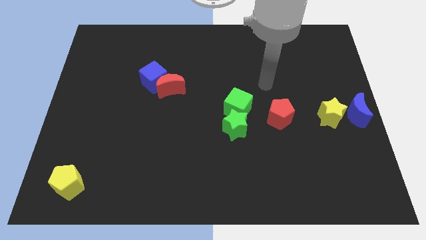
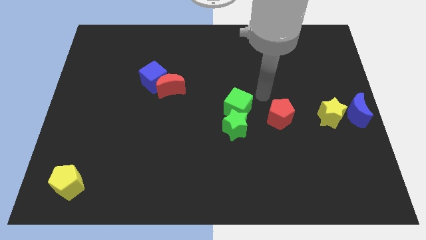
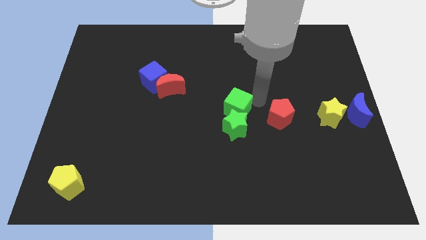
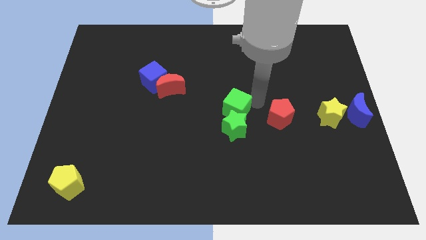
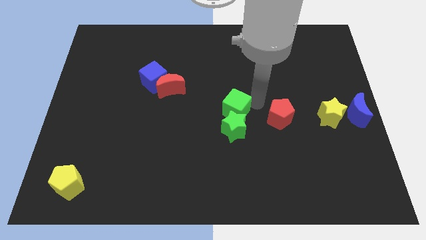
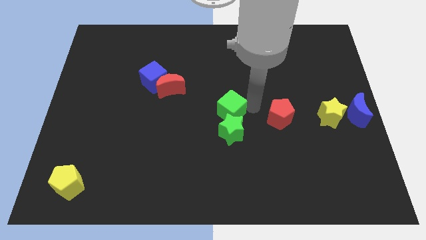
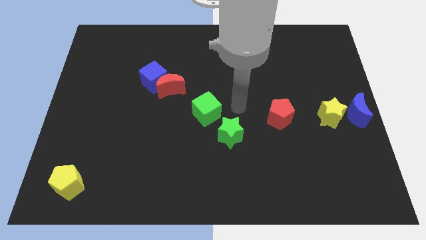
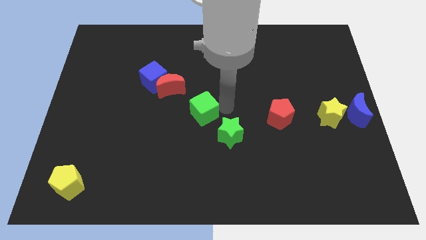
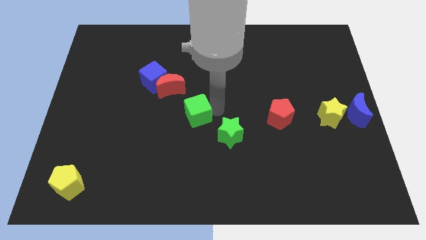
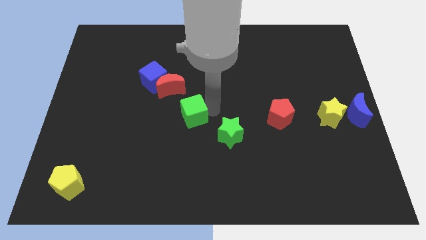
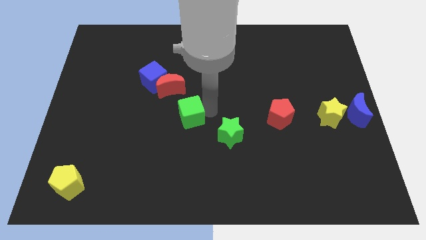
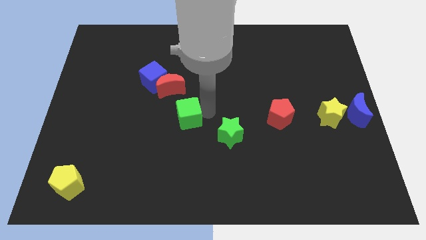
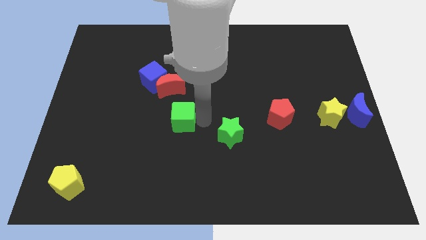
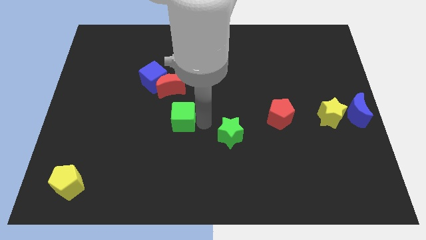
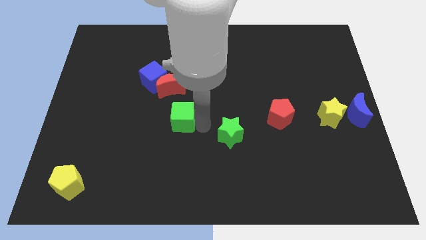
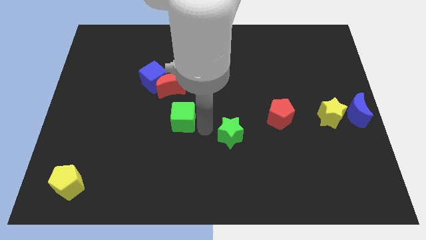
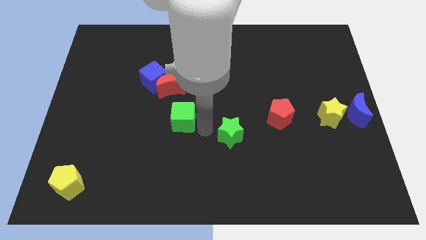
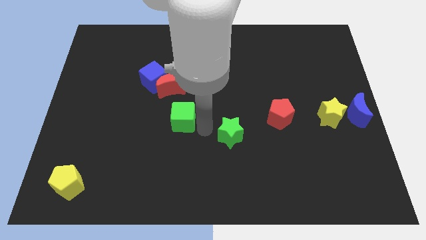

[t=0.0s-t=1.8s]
separate the green cube from the green star

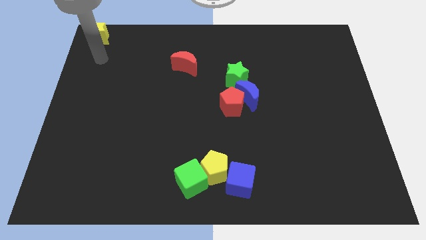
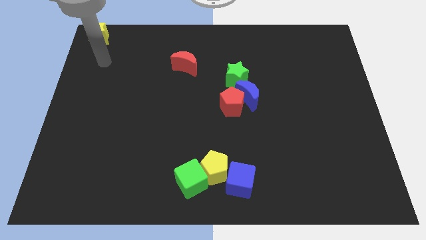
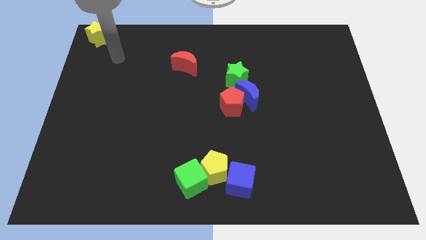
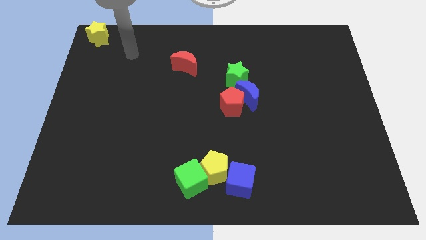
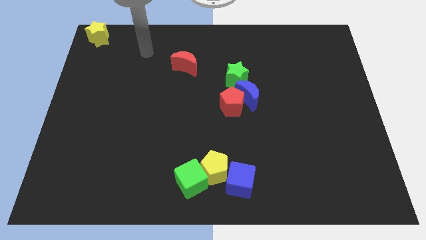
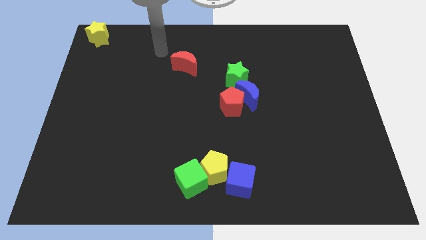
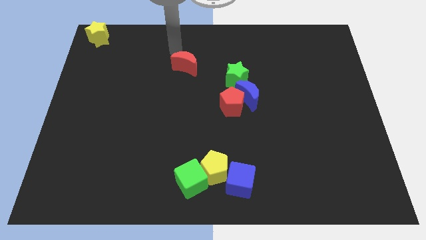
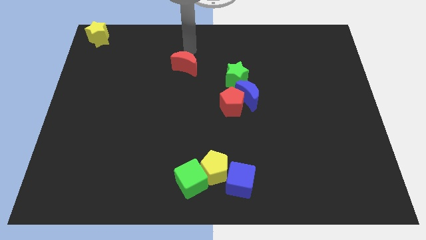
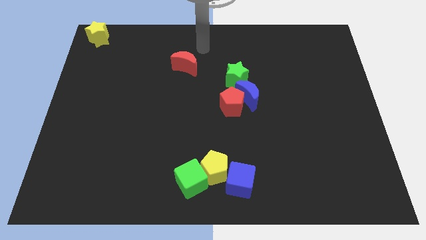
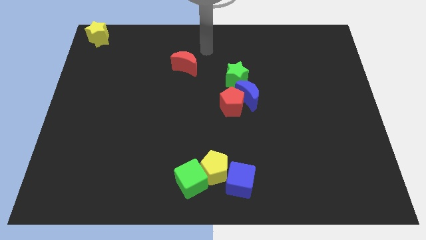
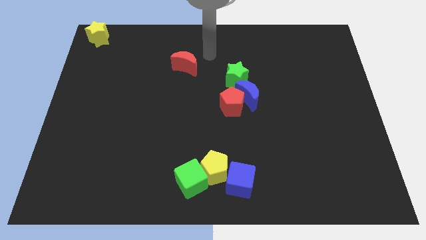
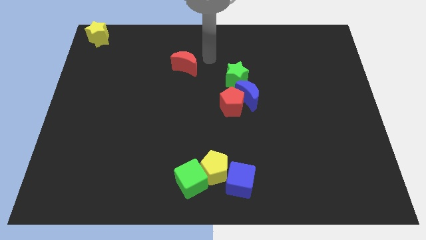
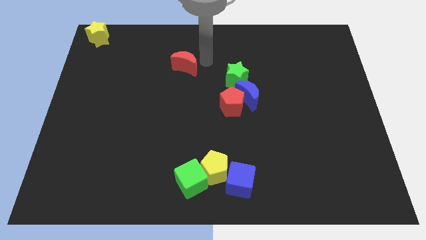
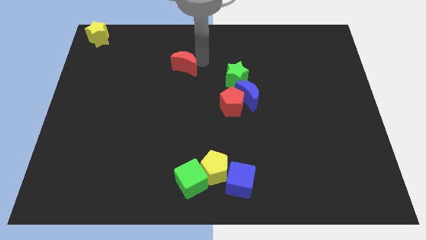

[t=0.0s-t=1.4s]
move your arm away from the yellow star

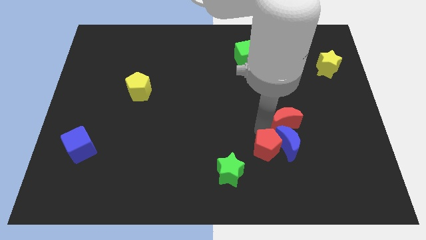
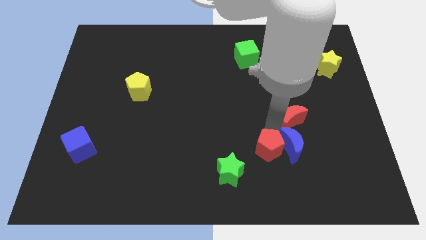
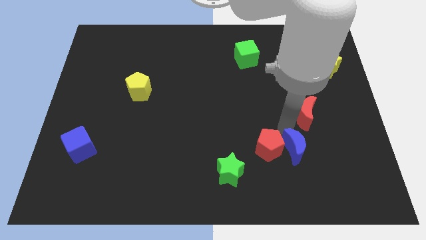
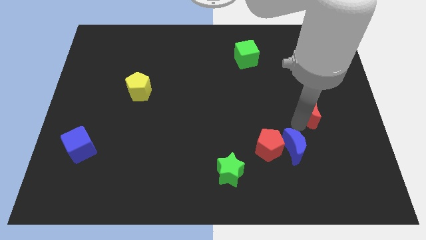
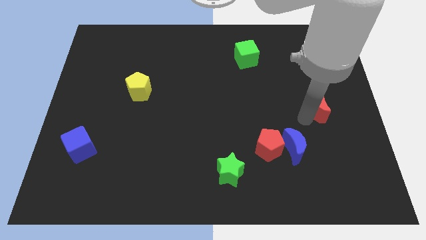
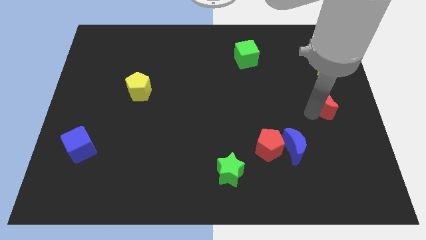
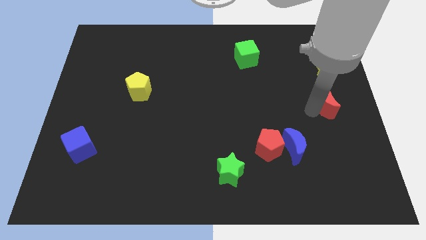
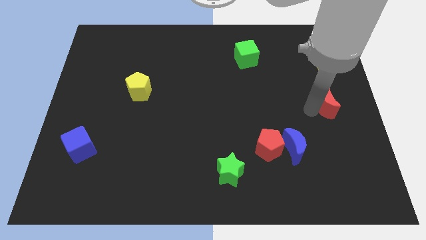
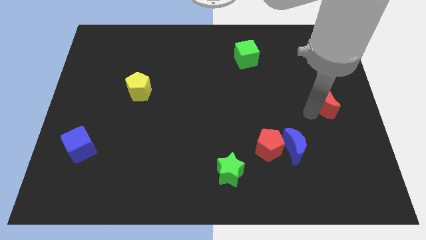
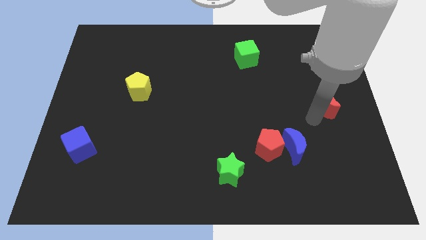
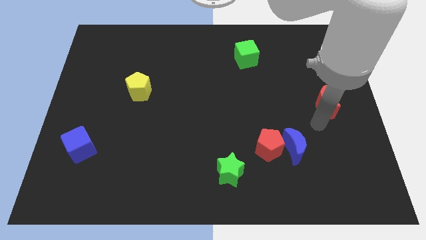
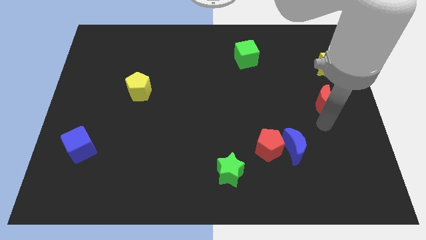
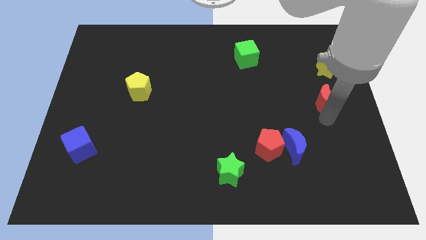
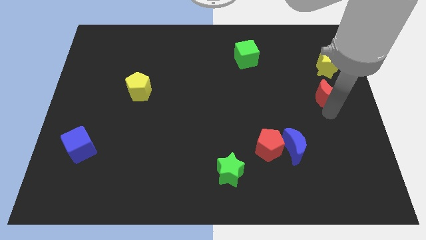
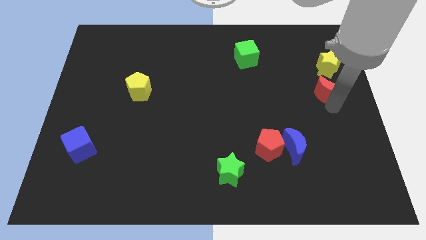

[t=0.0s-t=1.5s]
move the red moon below the yellow star

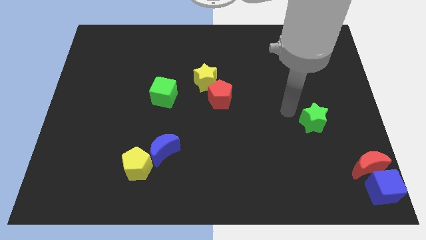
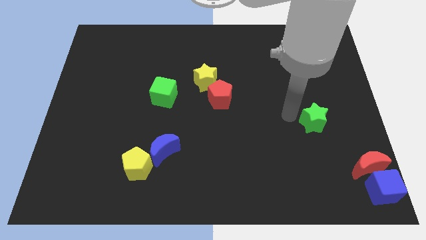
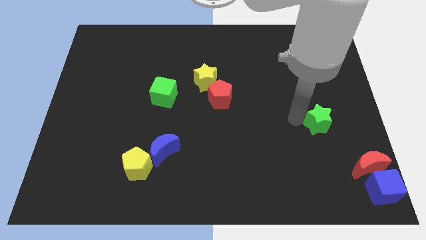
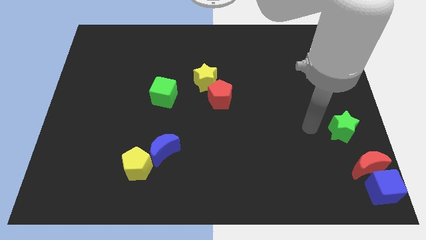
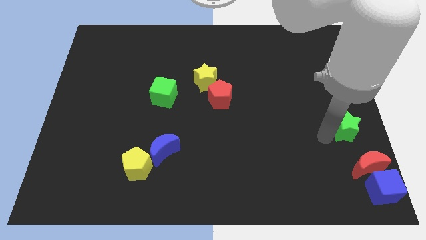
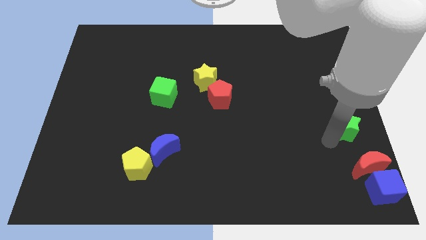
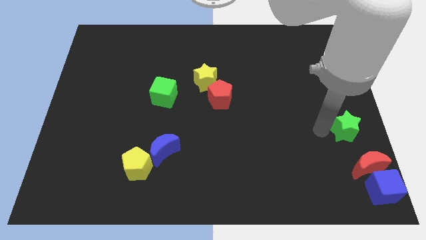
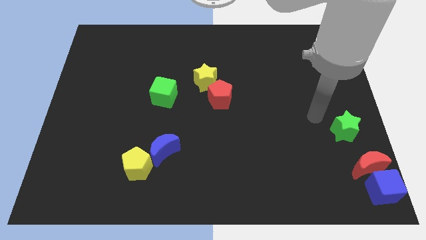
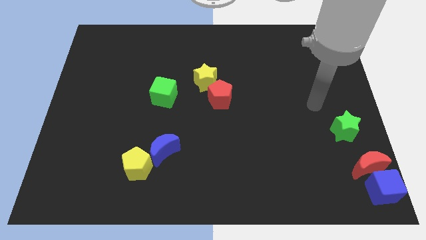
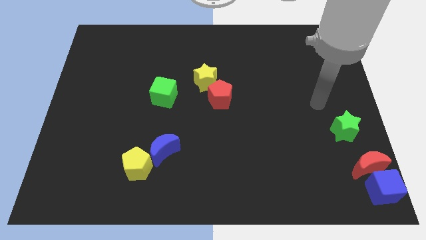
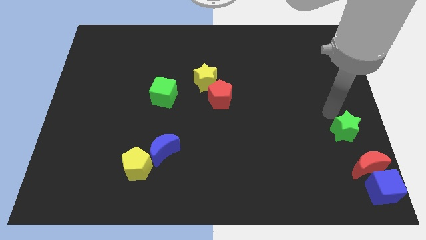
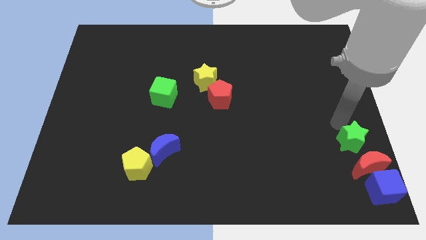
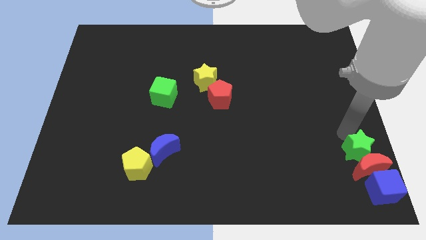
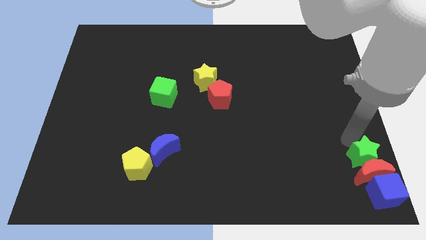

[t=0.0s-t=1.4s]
push green star into the red moon

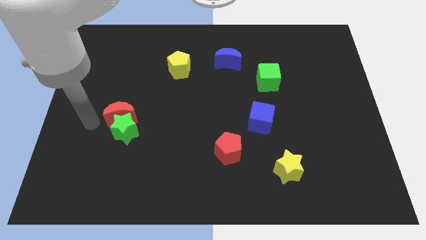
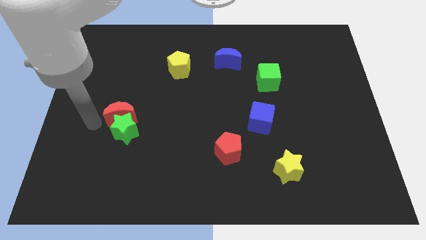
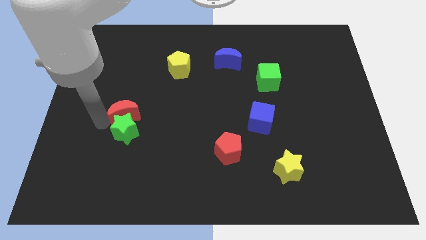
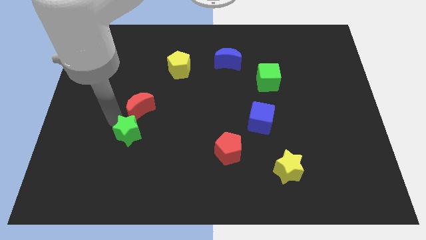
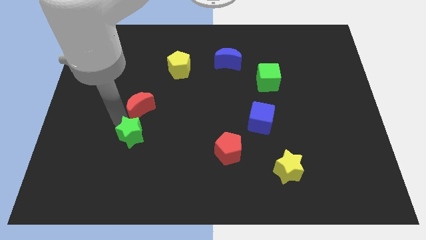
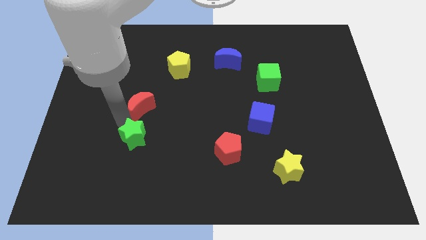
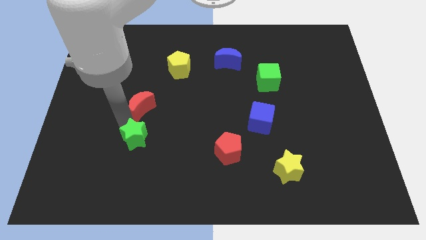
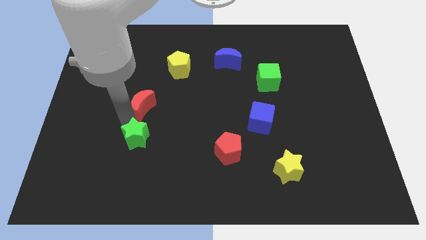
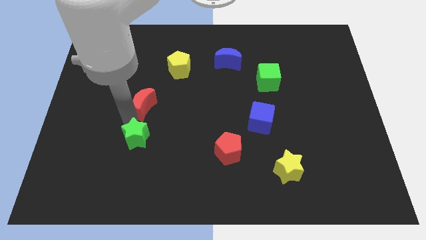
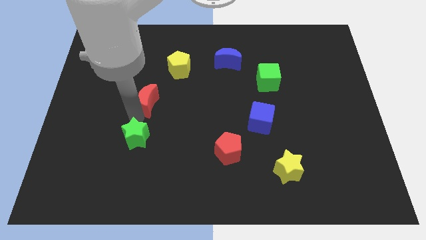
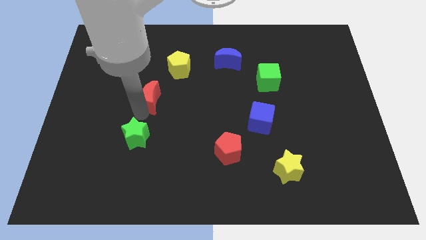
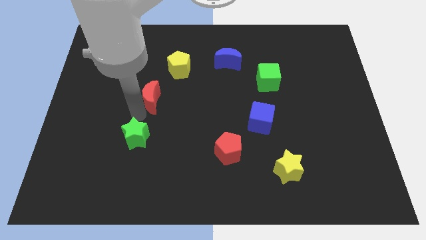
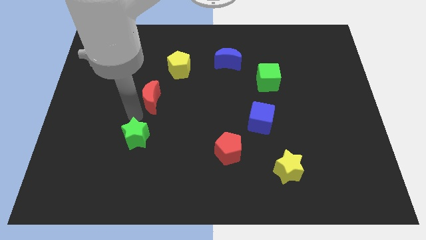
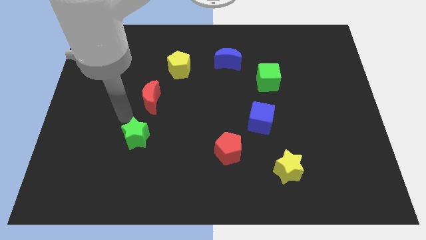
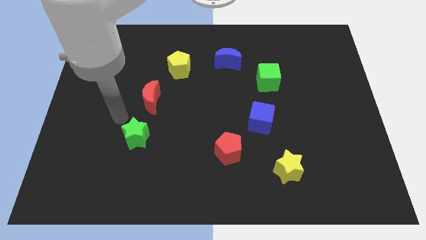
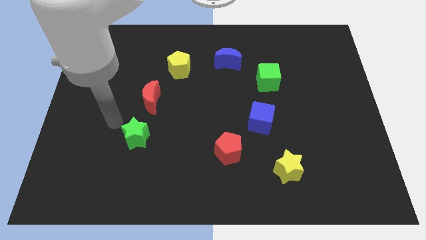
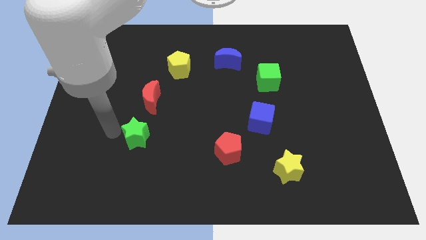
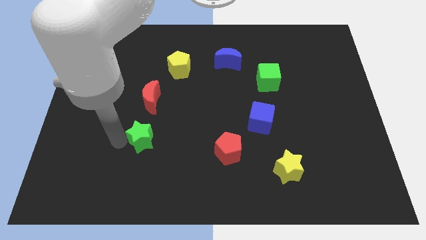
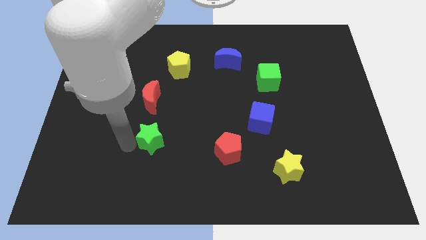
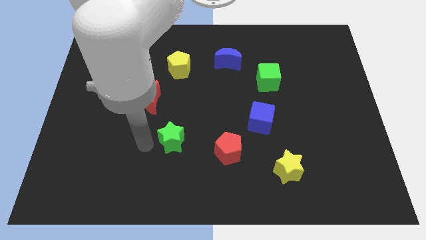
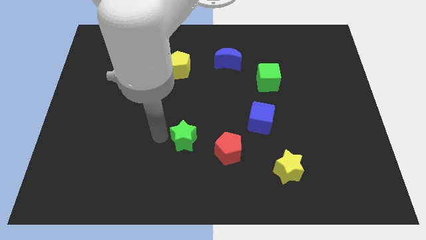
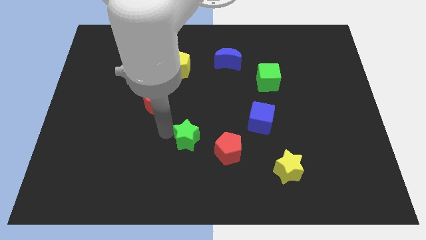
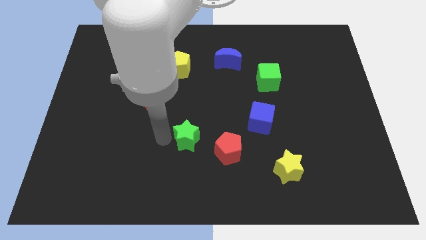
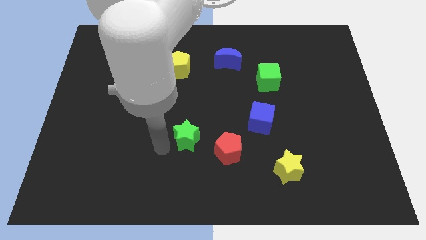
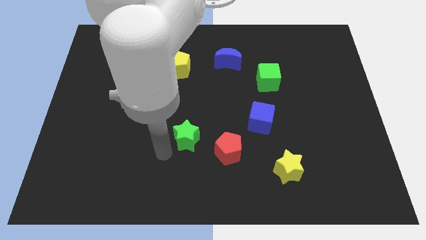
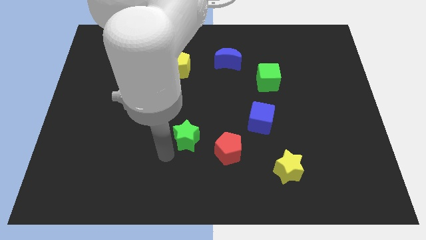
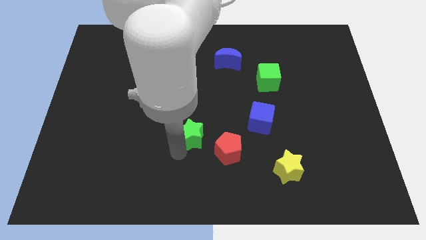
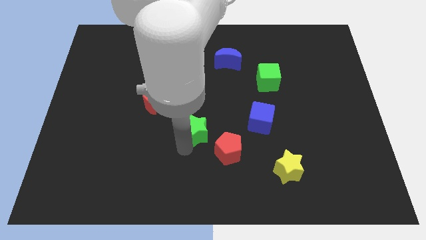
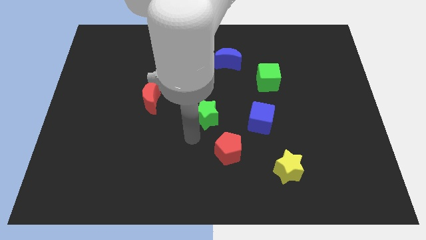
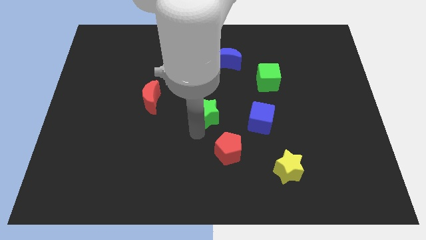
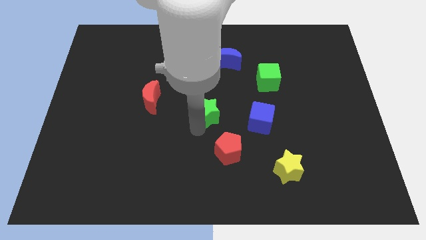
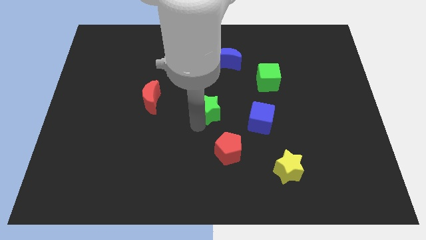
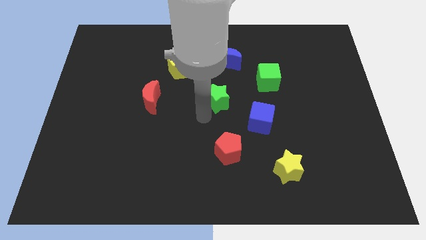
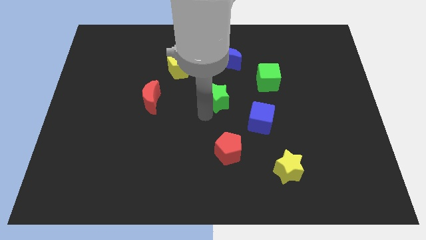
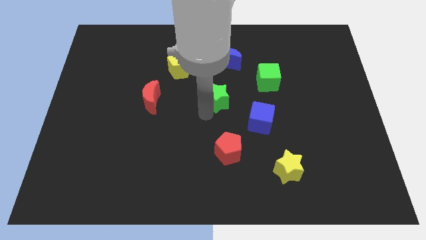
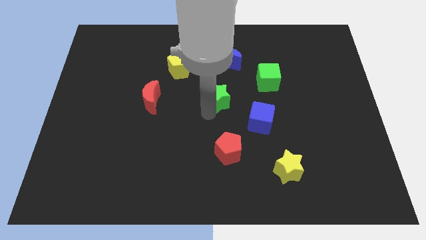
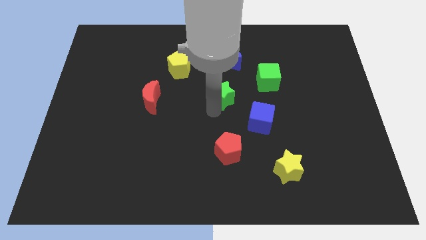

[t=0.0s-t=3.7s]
put the green star in between the blue moon and yellow pentagon diagonally
